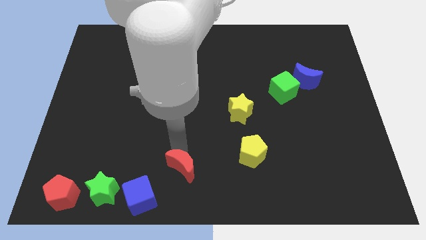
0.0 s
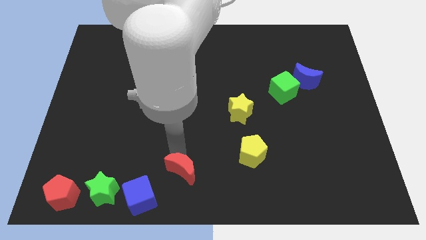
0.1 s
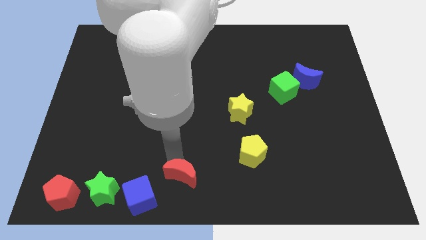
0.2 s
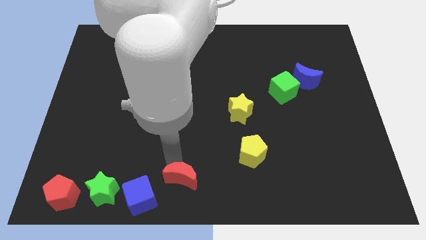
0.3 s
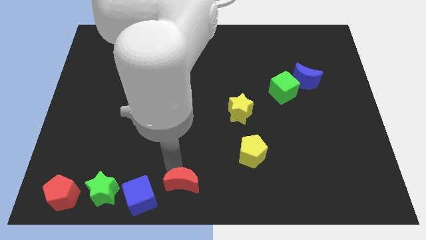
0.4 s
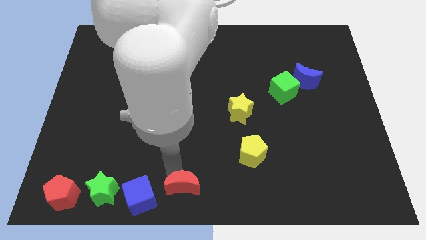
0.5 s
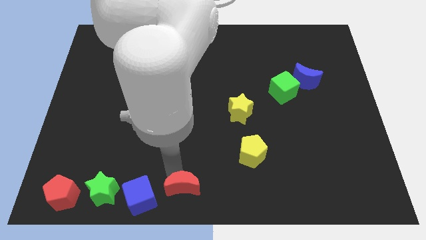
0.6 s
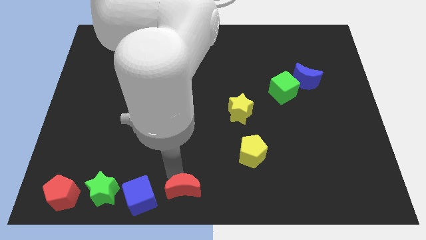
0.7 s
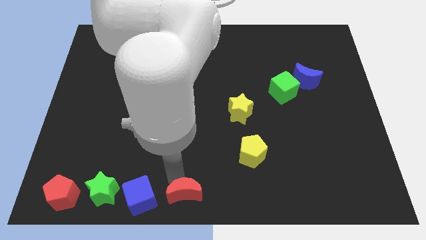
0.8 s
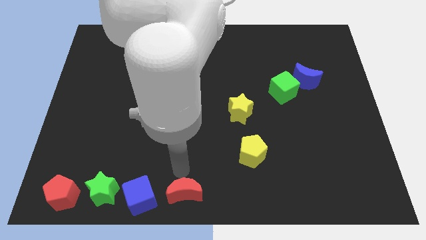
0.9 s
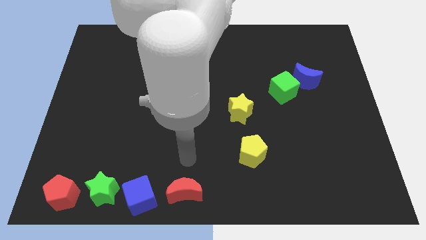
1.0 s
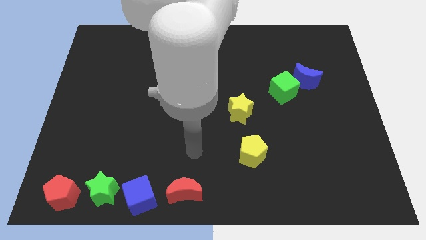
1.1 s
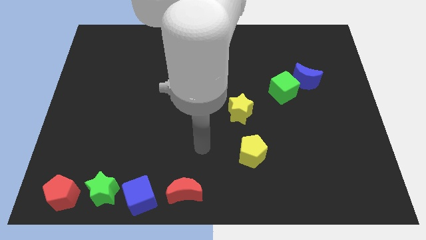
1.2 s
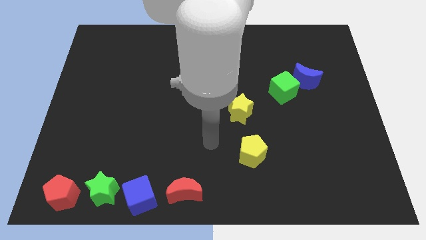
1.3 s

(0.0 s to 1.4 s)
move the red crescent adjacent to the blue cube

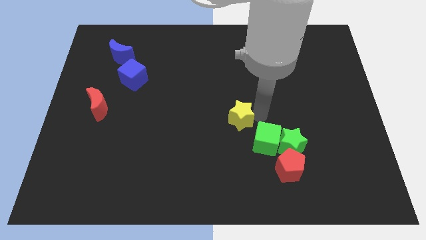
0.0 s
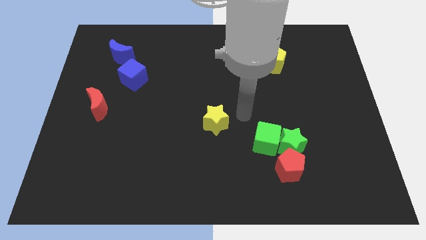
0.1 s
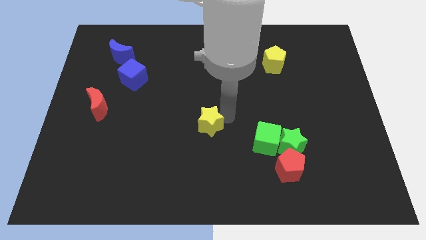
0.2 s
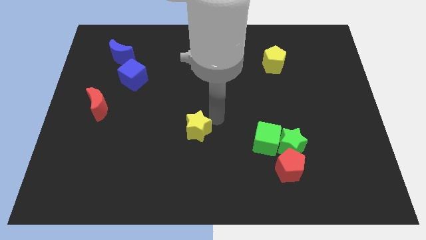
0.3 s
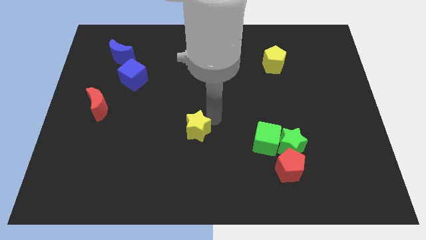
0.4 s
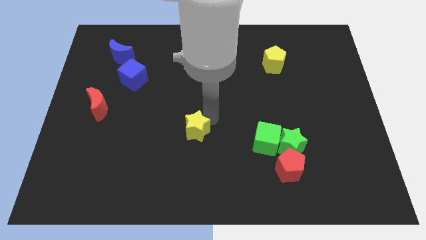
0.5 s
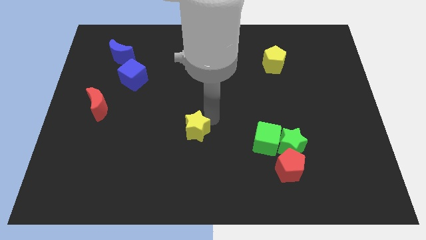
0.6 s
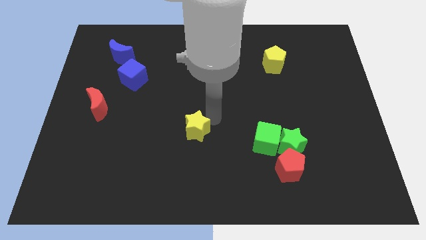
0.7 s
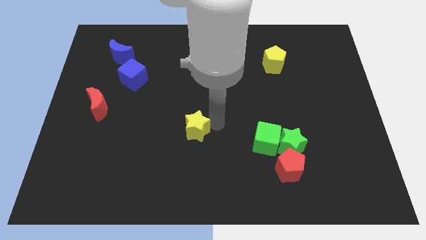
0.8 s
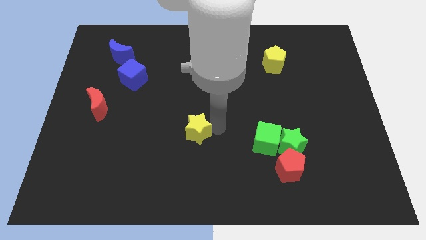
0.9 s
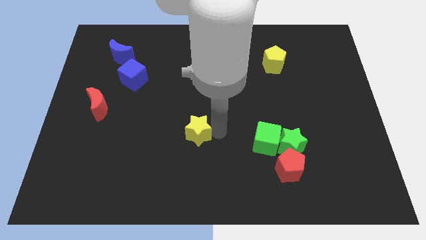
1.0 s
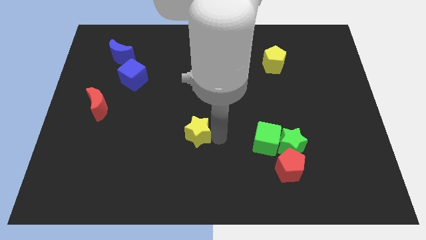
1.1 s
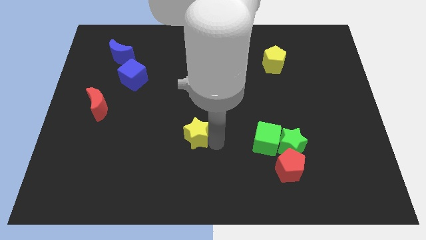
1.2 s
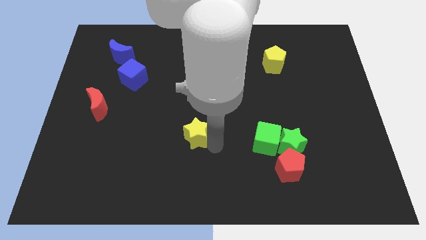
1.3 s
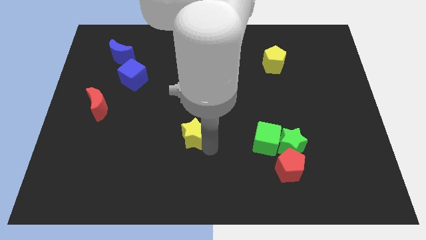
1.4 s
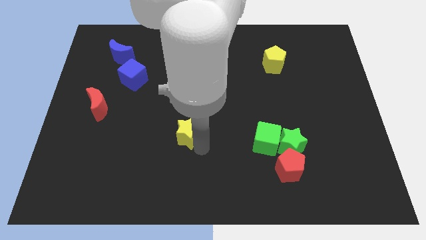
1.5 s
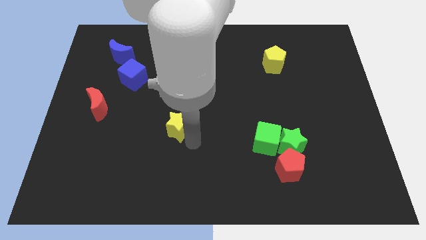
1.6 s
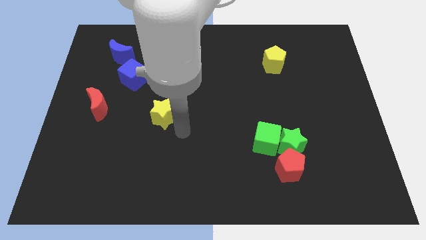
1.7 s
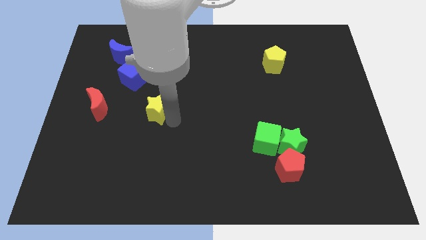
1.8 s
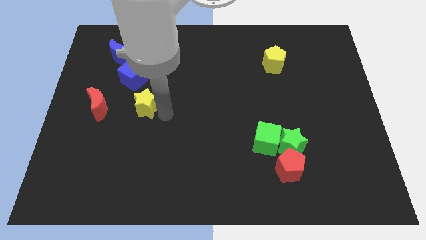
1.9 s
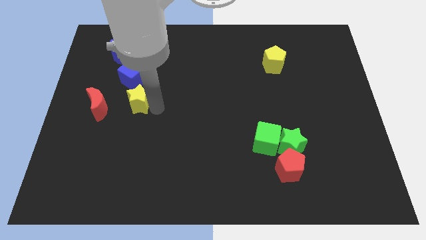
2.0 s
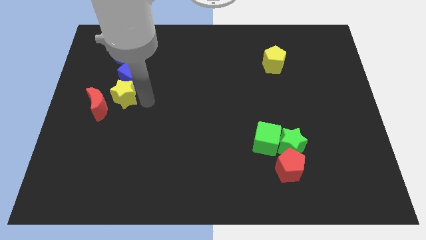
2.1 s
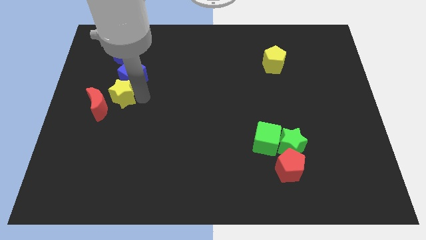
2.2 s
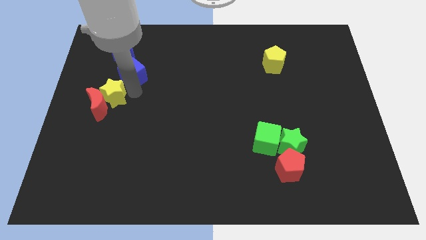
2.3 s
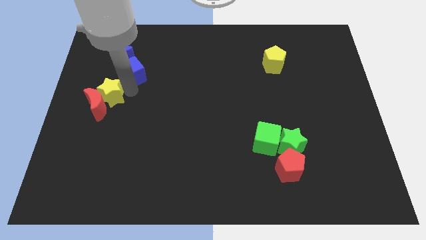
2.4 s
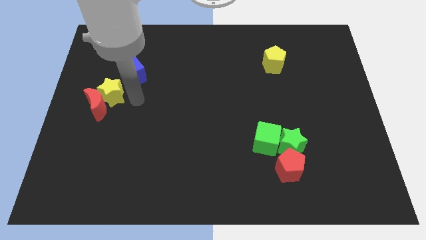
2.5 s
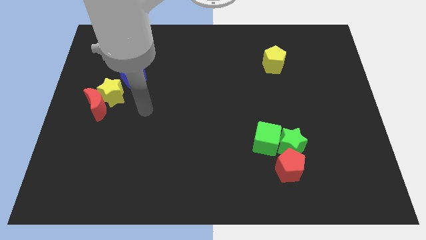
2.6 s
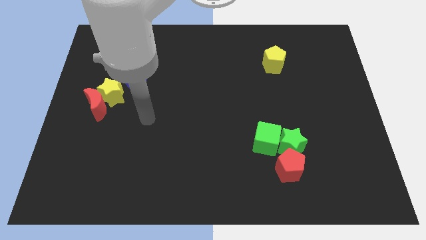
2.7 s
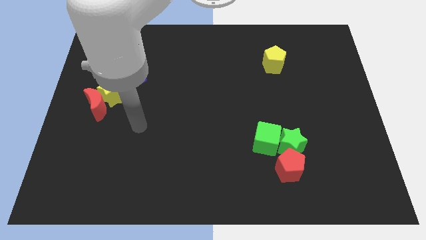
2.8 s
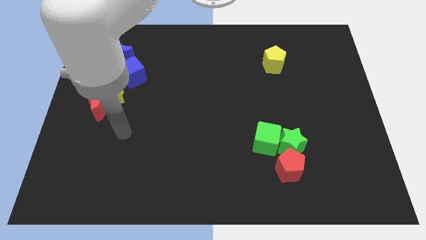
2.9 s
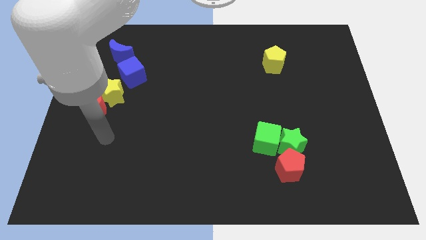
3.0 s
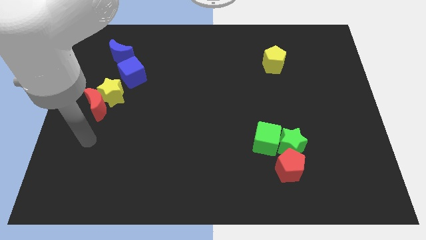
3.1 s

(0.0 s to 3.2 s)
move the yellow star into red moon

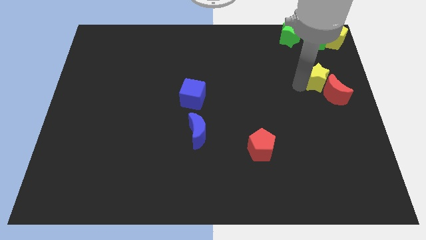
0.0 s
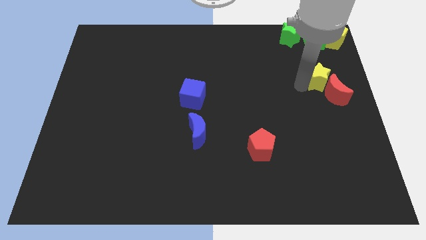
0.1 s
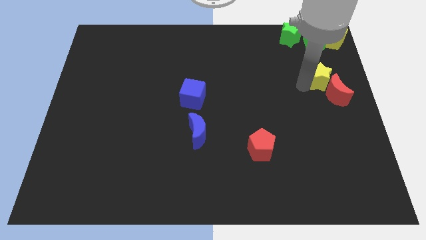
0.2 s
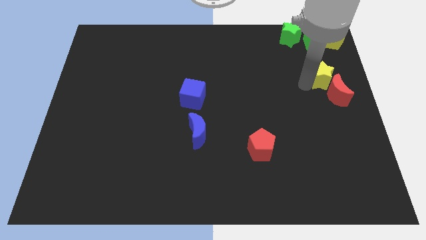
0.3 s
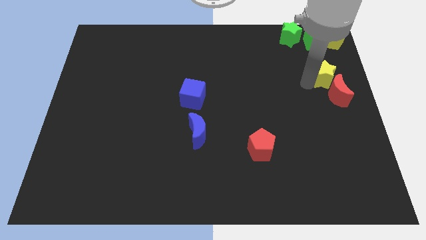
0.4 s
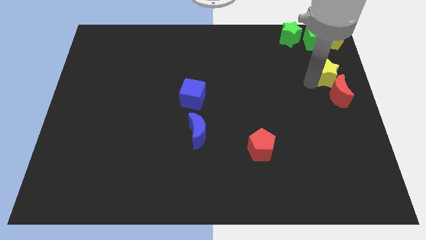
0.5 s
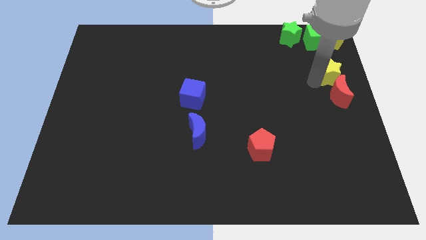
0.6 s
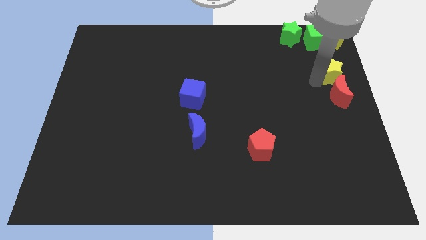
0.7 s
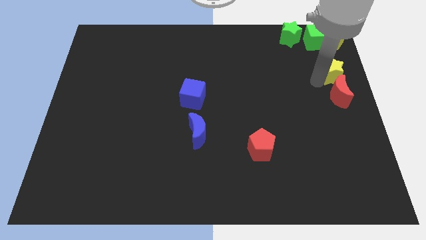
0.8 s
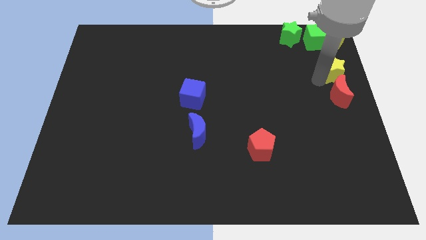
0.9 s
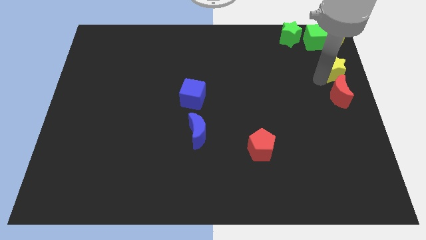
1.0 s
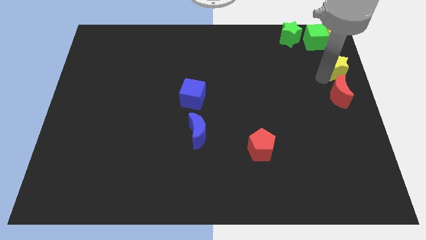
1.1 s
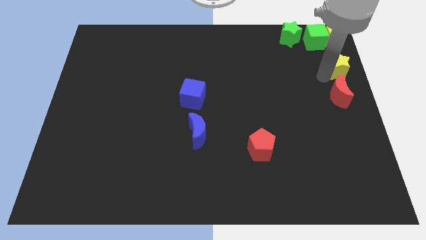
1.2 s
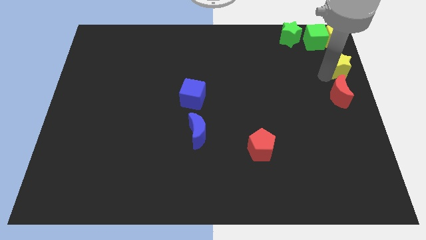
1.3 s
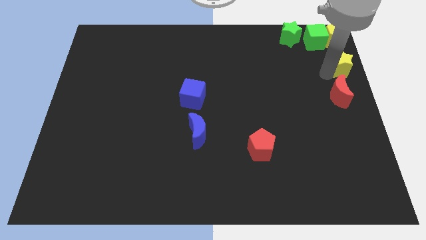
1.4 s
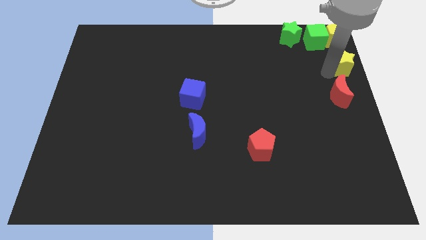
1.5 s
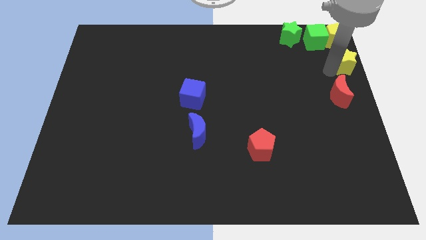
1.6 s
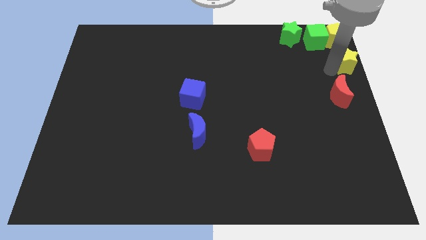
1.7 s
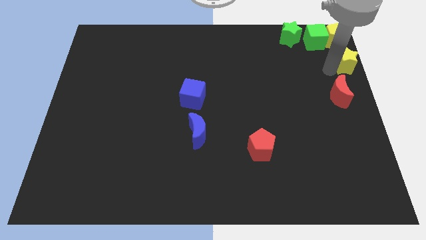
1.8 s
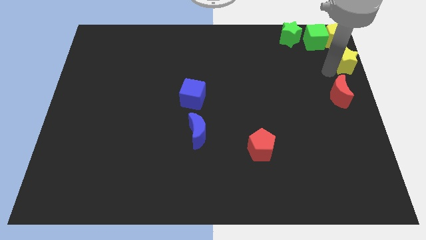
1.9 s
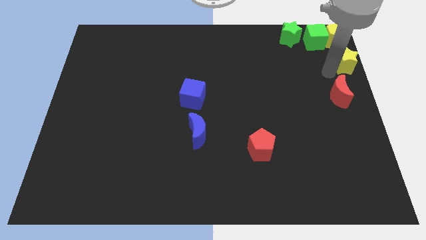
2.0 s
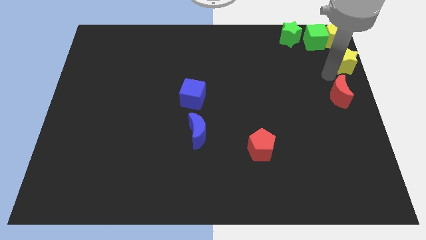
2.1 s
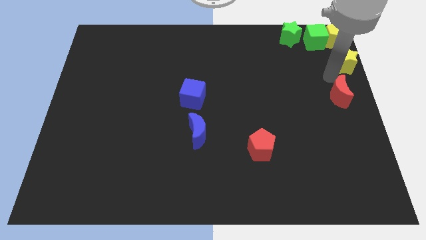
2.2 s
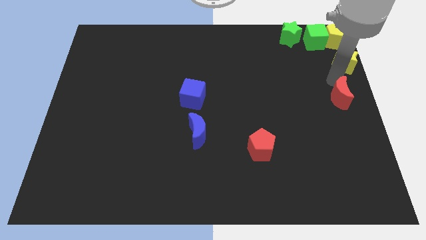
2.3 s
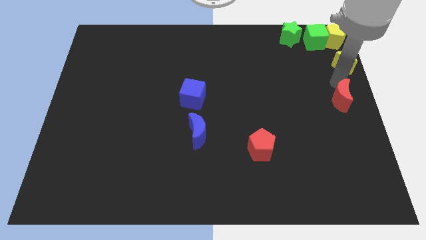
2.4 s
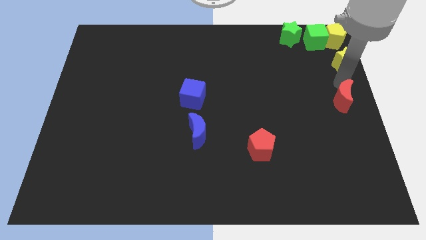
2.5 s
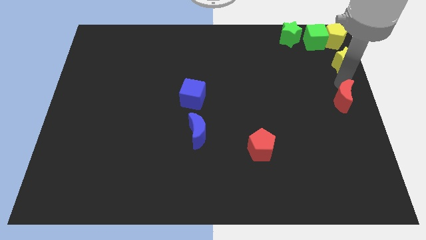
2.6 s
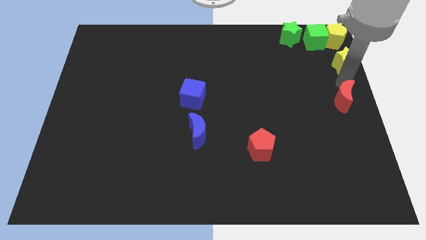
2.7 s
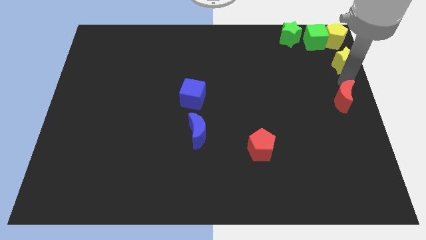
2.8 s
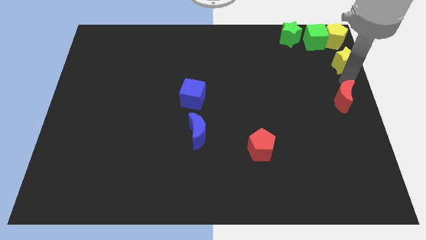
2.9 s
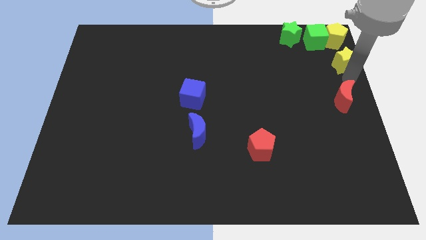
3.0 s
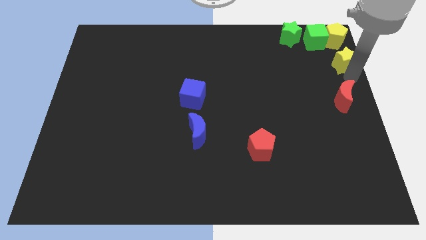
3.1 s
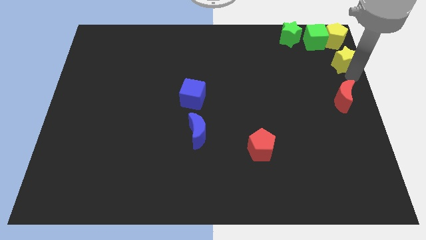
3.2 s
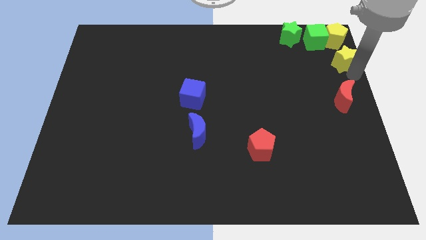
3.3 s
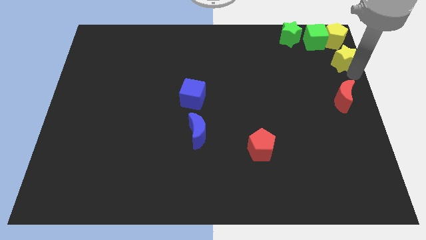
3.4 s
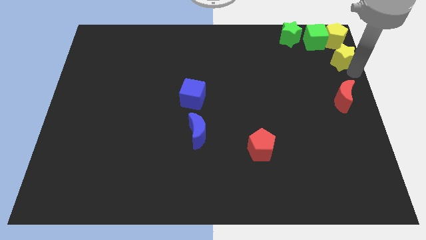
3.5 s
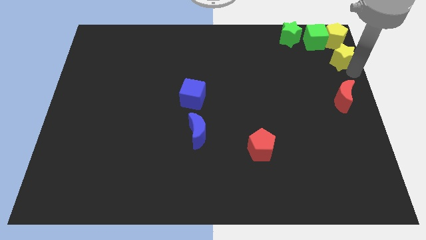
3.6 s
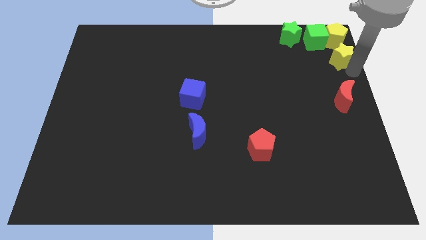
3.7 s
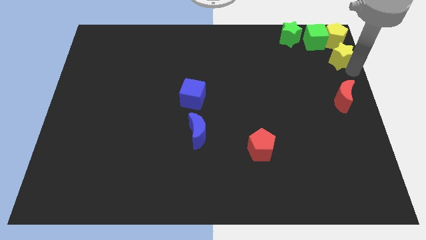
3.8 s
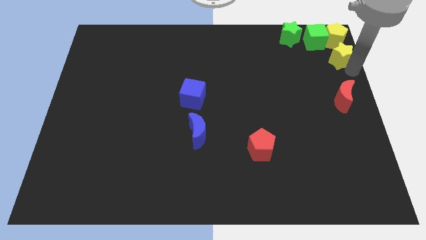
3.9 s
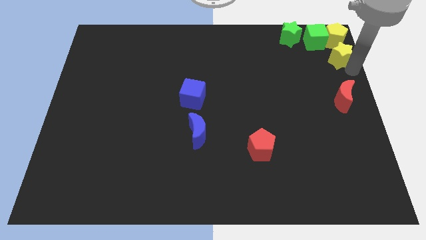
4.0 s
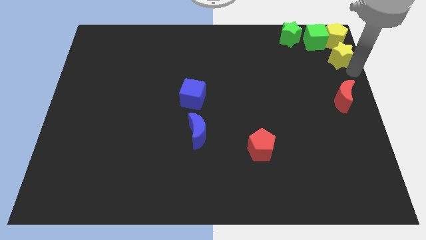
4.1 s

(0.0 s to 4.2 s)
bring the yellow star near to the bottom side of the yellow pentagon

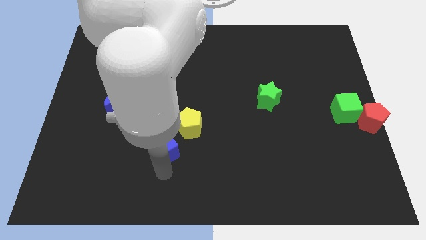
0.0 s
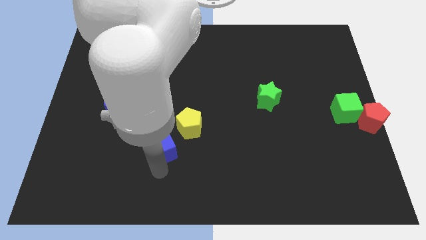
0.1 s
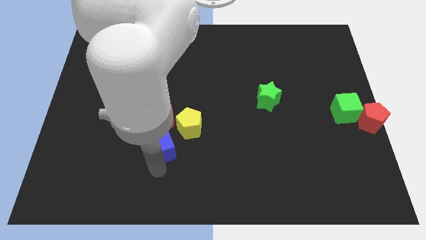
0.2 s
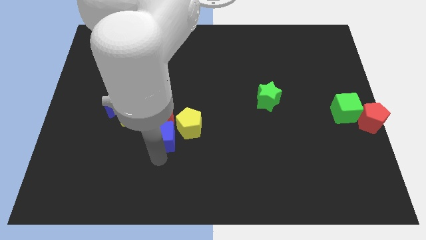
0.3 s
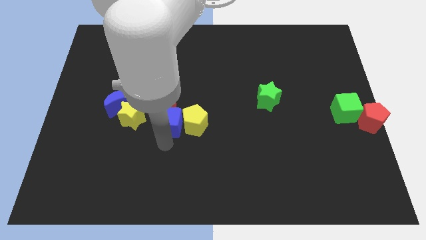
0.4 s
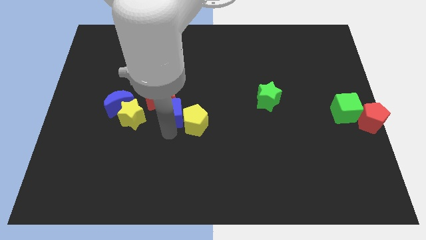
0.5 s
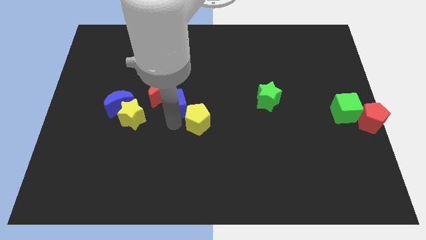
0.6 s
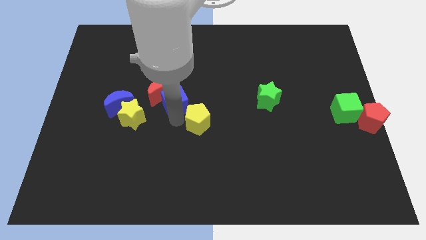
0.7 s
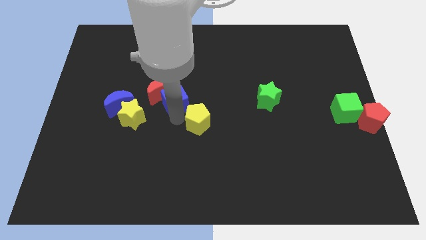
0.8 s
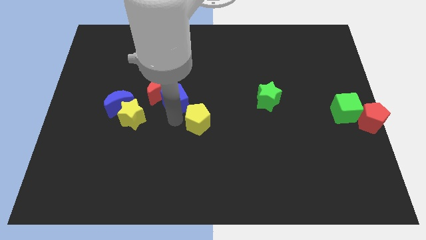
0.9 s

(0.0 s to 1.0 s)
place the blue cube in between the yellow pentagon and red crescent to form a diagonal line
